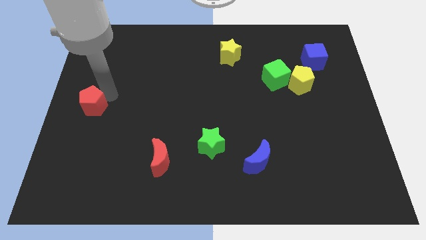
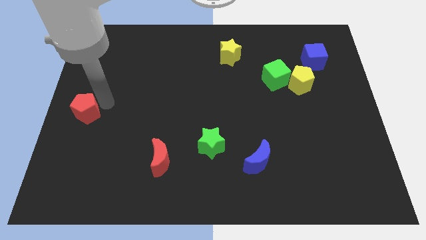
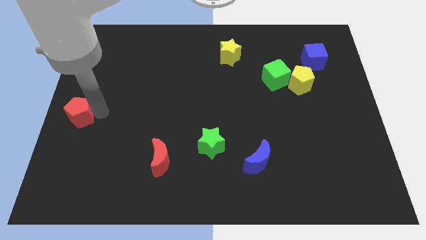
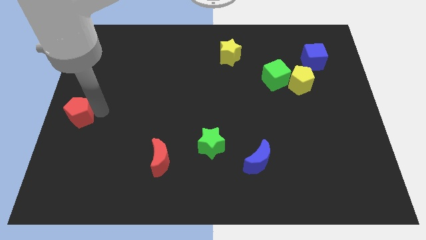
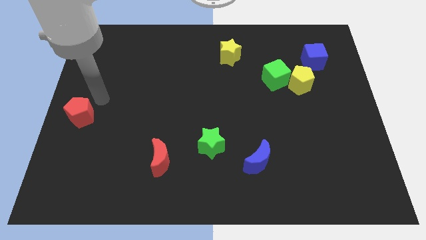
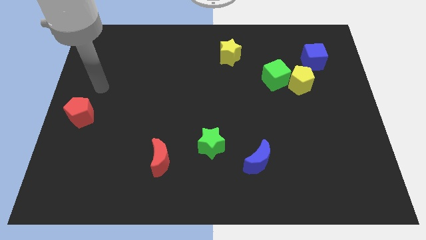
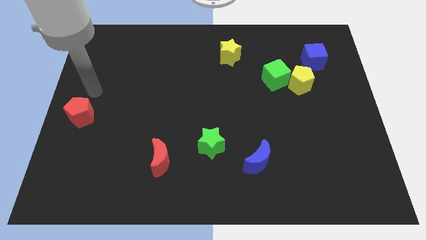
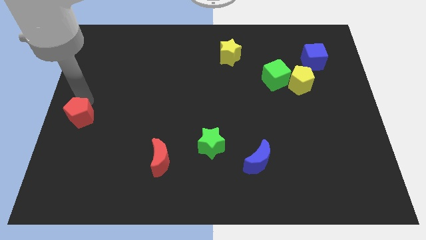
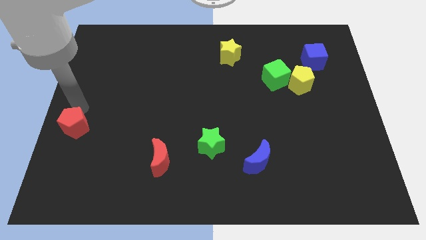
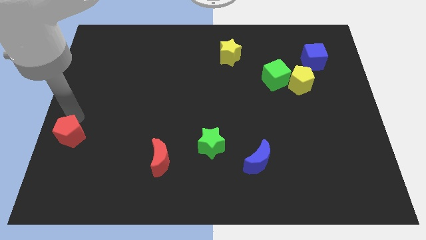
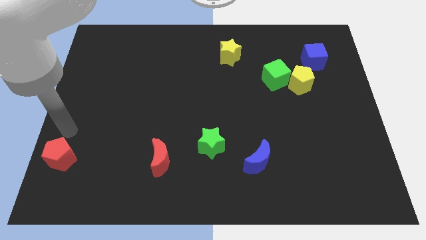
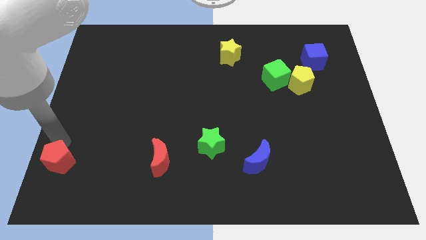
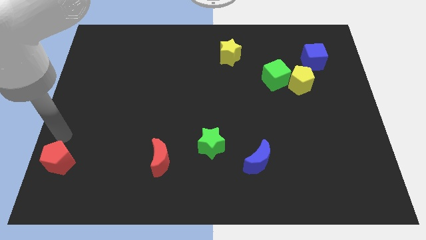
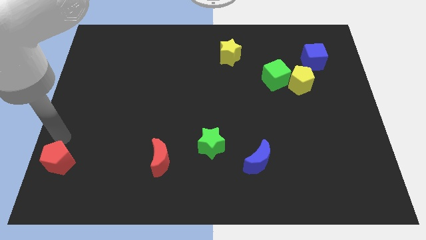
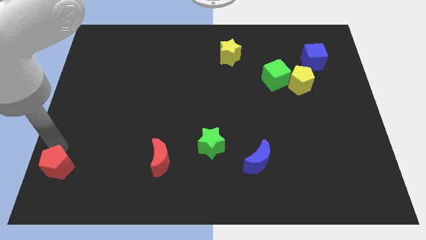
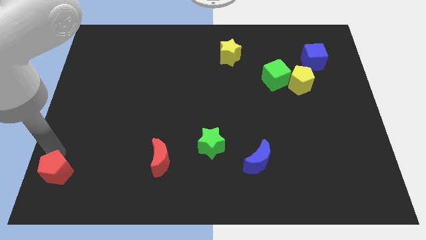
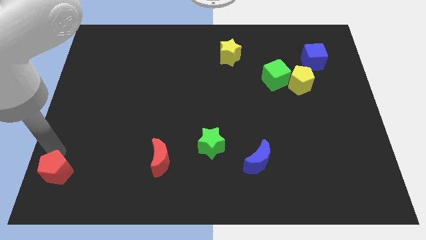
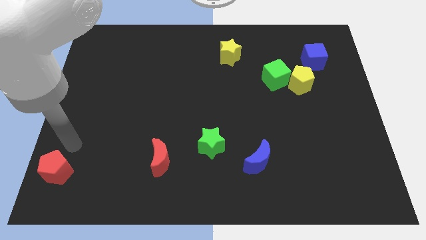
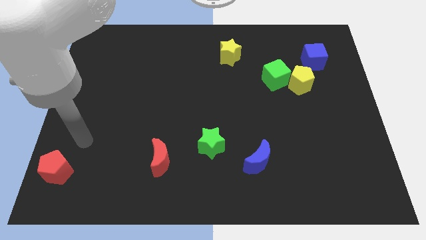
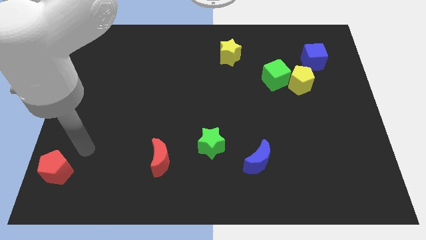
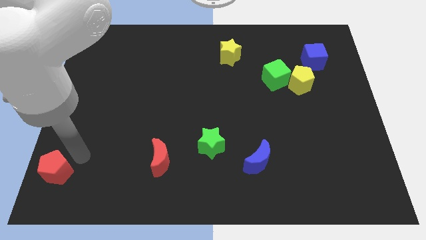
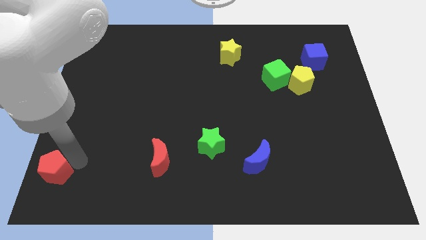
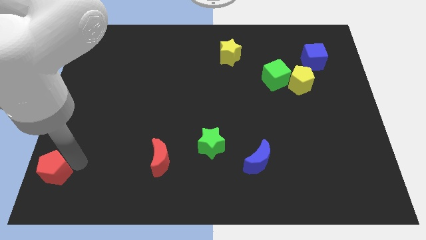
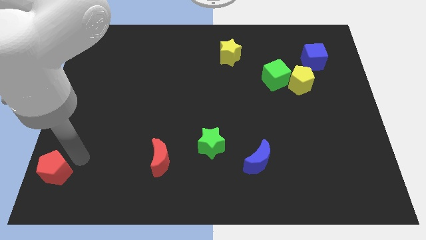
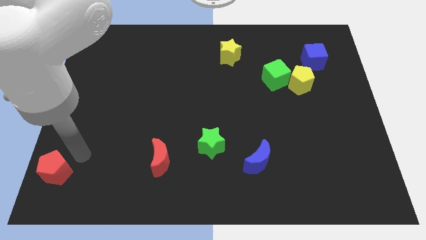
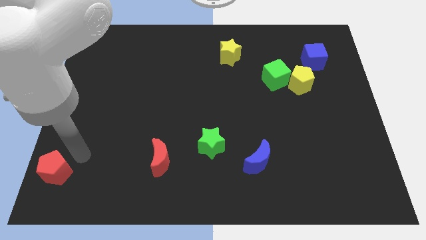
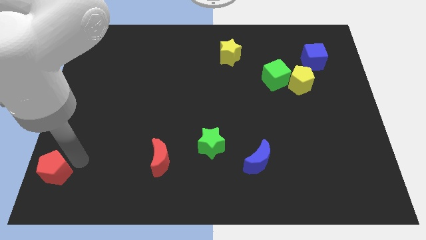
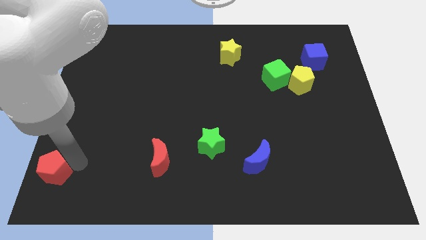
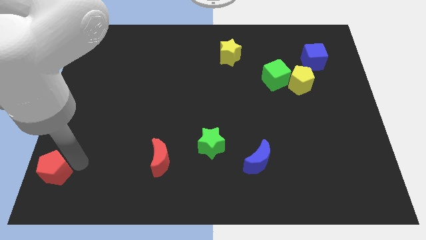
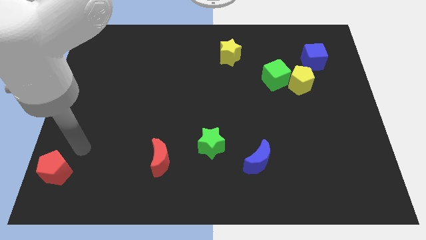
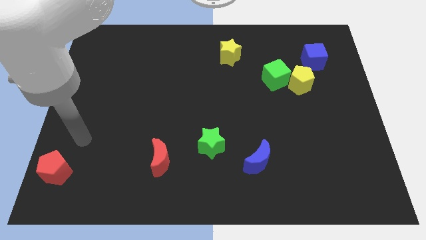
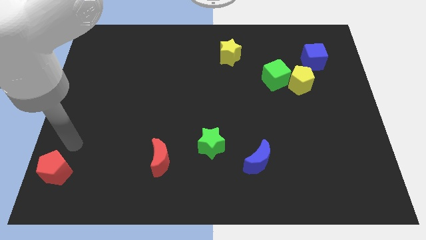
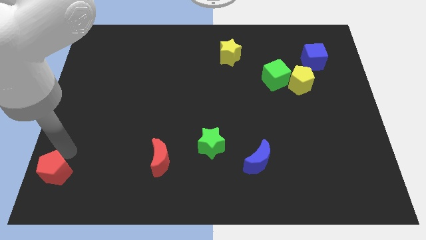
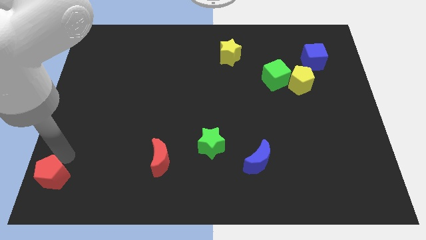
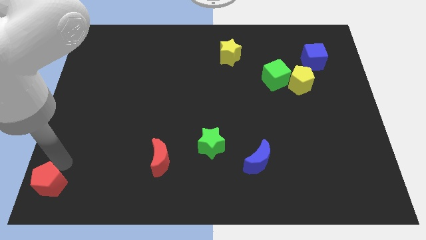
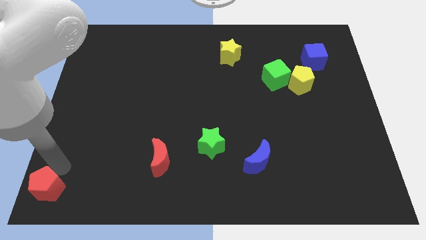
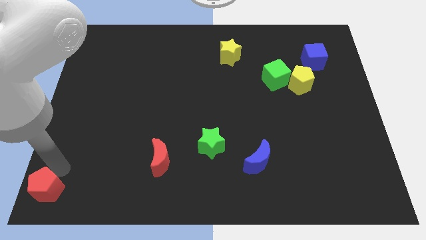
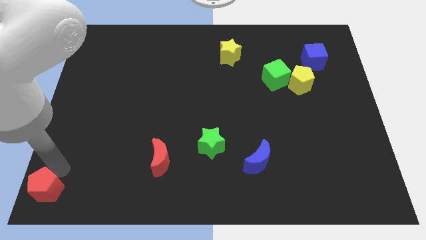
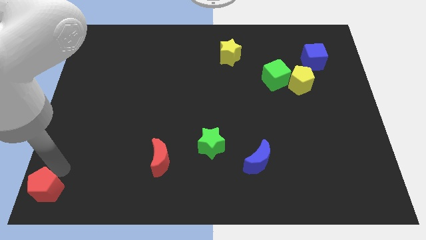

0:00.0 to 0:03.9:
place the red pentagon towards the bottom left corner of the board

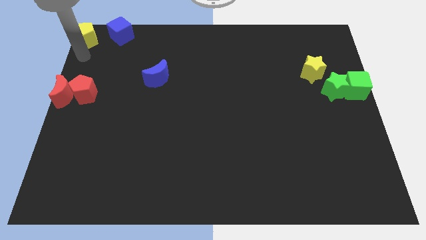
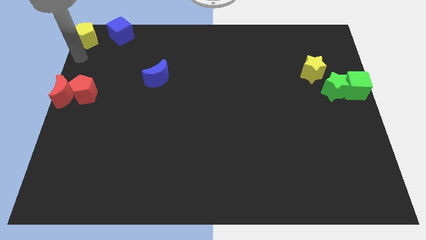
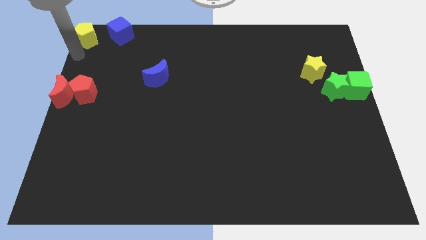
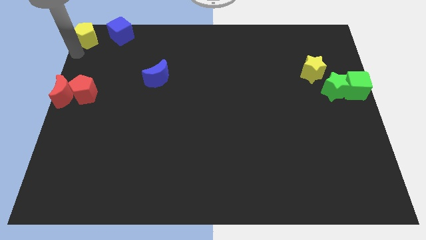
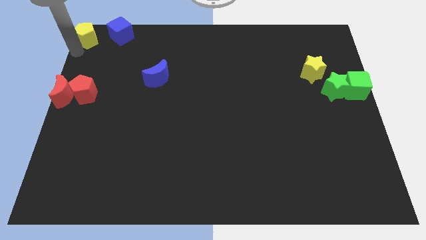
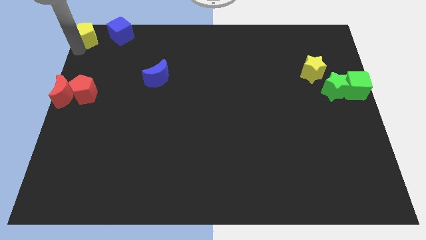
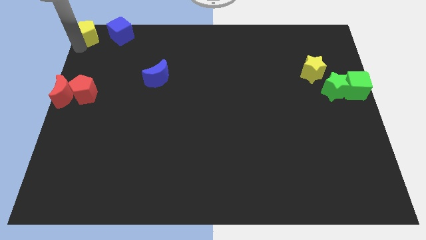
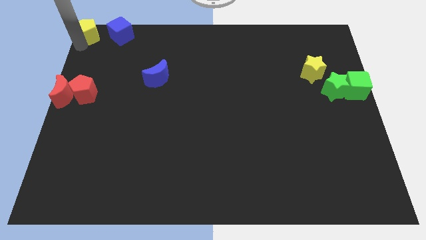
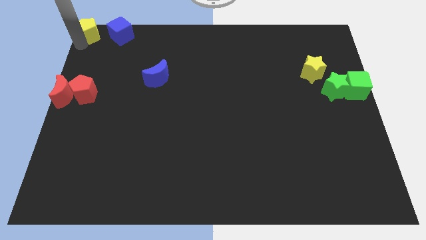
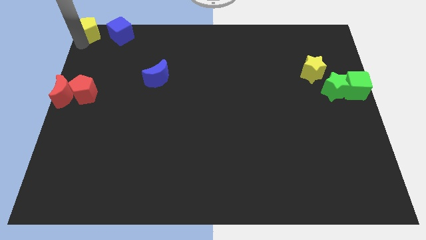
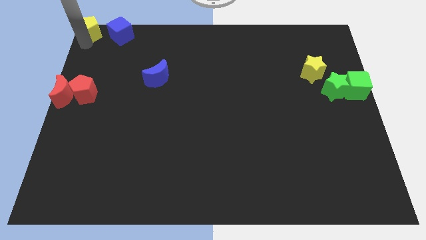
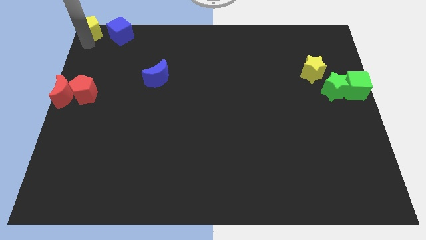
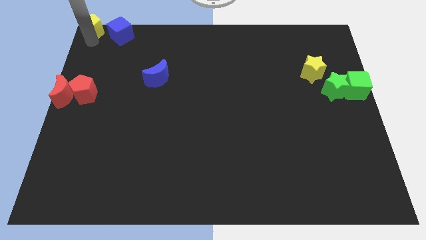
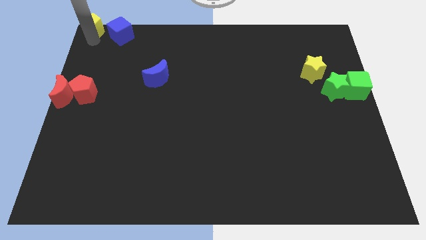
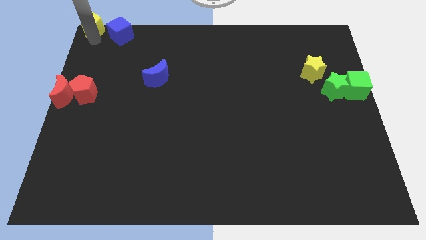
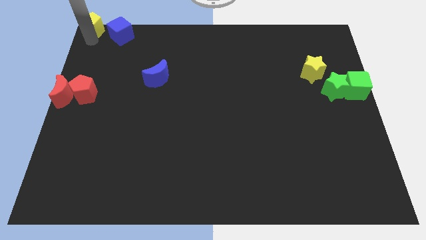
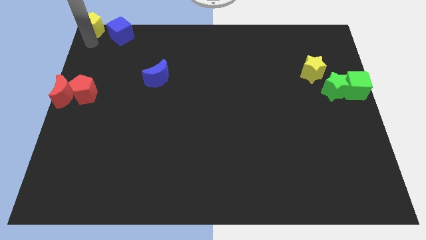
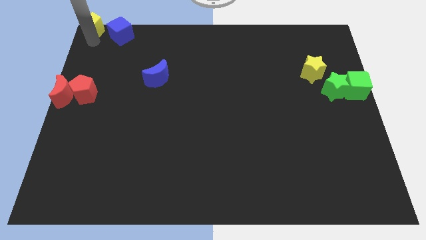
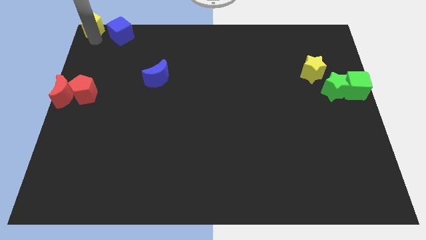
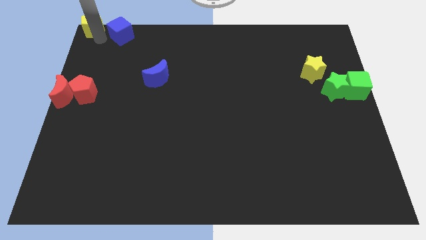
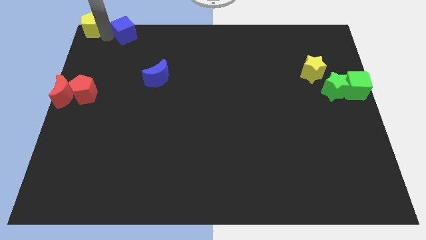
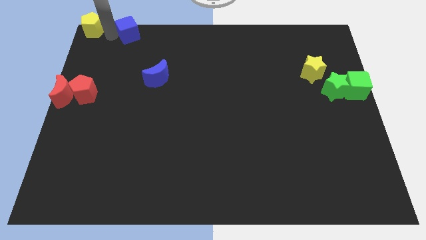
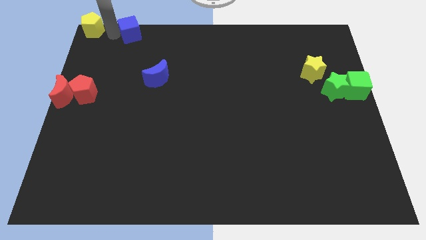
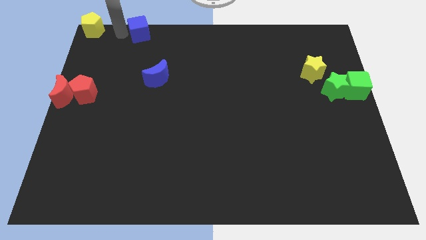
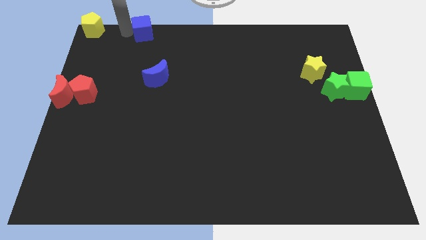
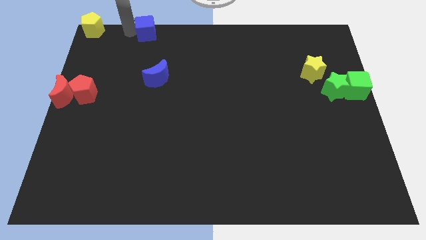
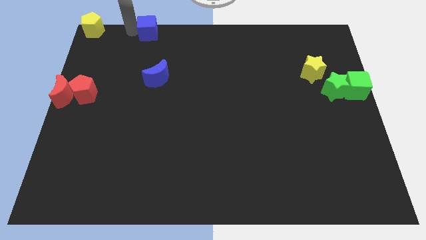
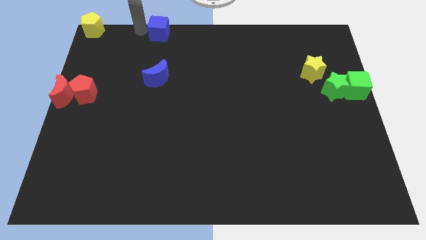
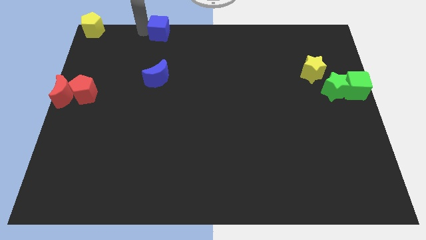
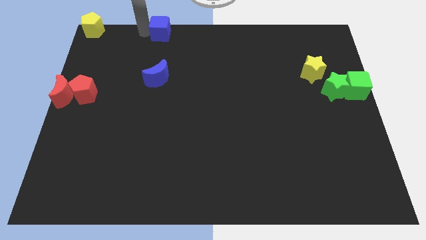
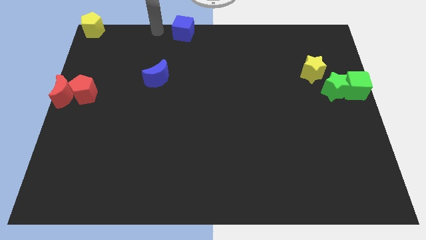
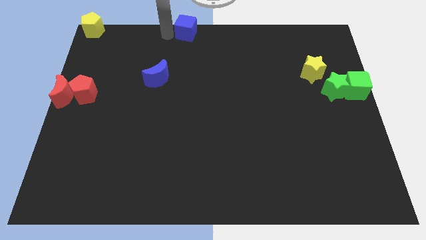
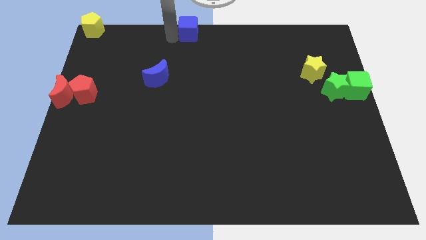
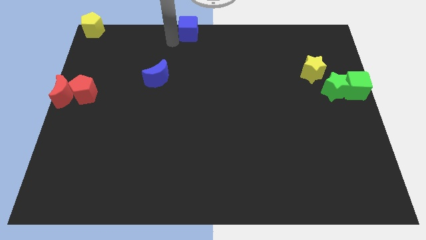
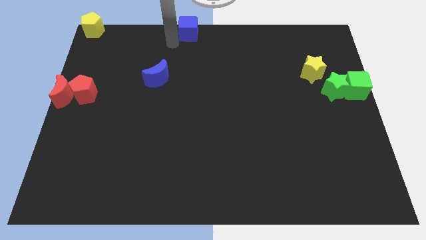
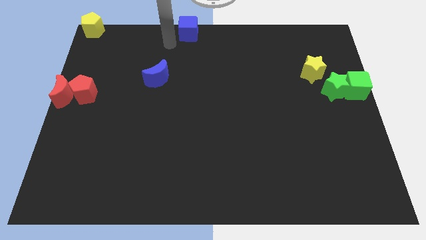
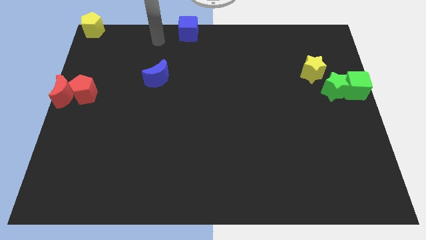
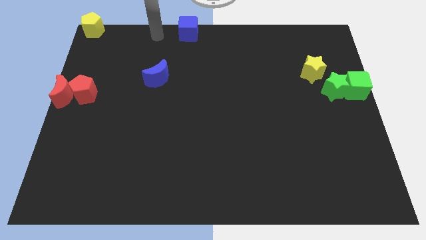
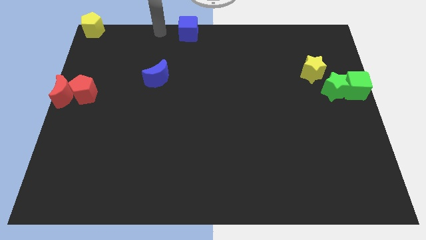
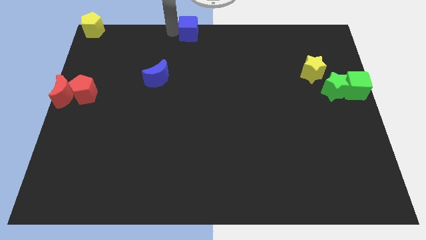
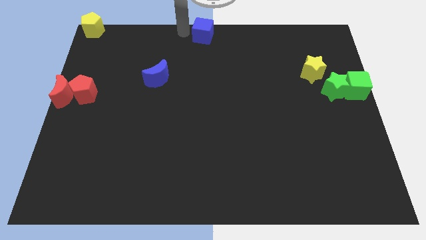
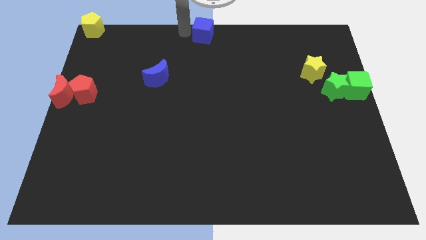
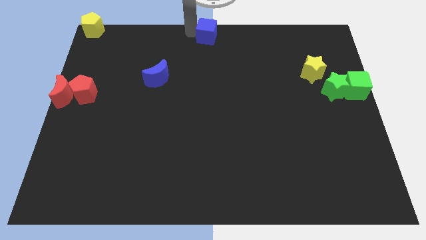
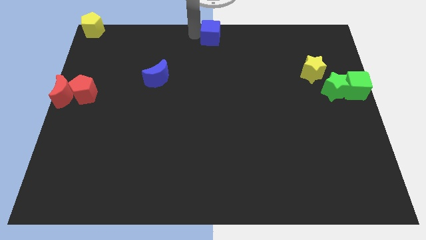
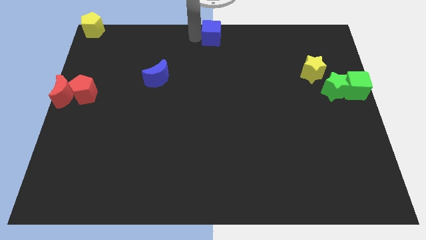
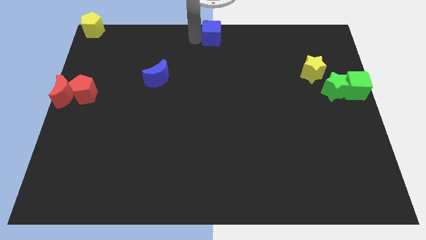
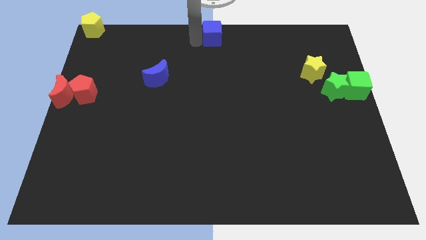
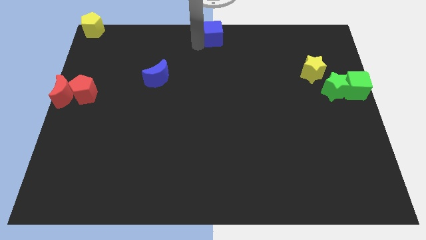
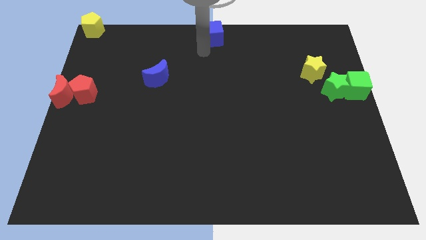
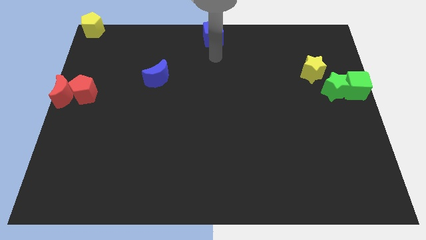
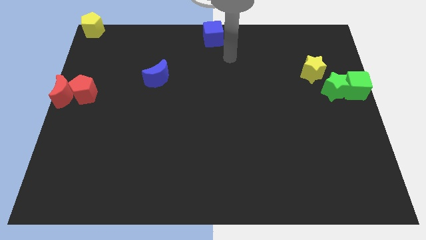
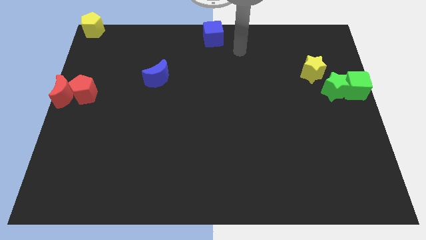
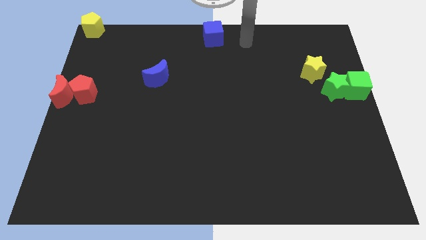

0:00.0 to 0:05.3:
push the blue cube to the right
